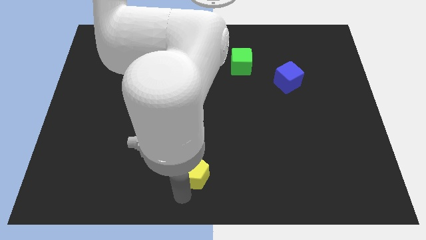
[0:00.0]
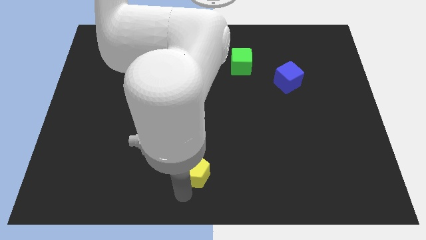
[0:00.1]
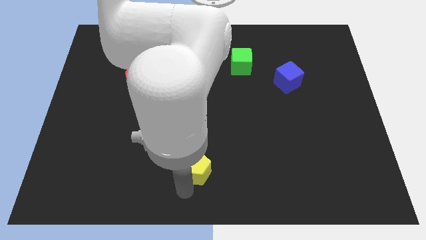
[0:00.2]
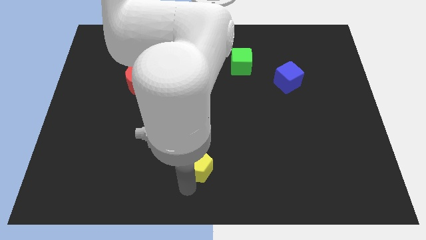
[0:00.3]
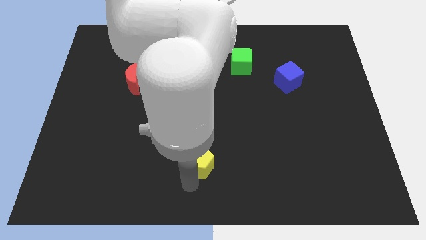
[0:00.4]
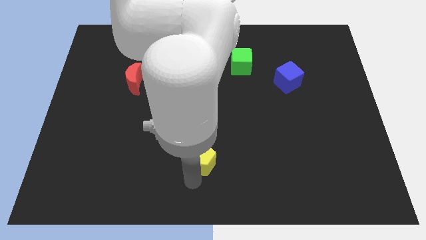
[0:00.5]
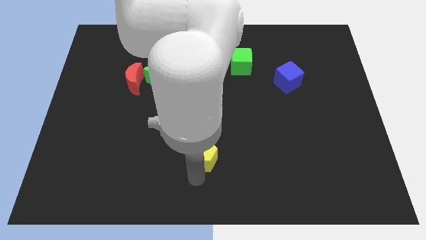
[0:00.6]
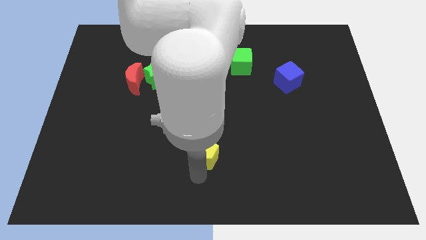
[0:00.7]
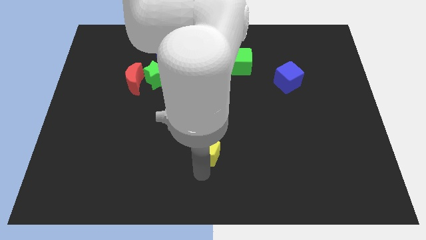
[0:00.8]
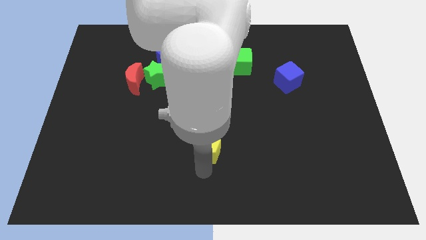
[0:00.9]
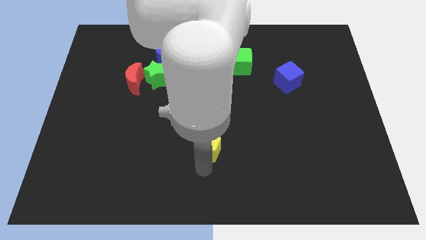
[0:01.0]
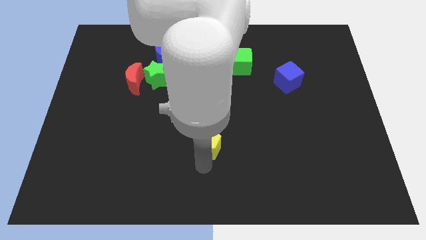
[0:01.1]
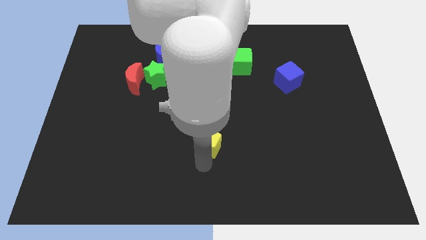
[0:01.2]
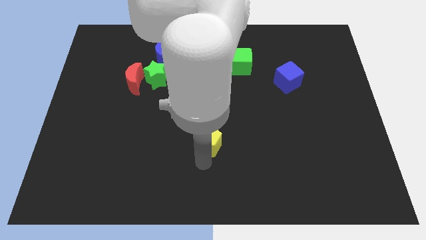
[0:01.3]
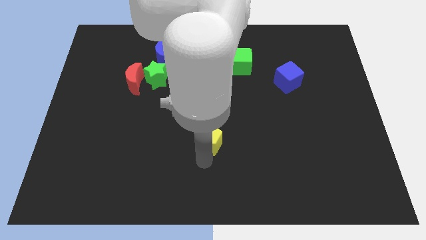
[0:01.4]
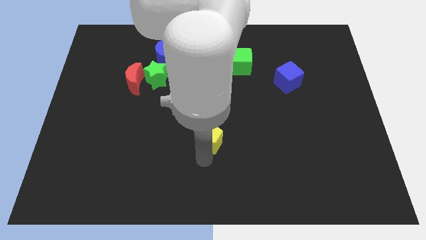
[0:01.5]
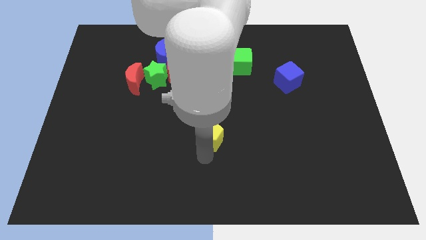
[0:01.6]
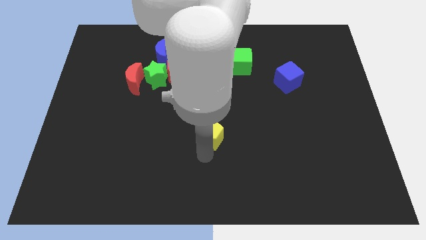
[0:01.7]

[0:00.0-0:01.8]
push yellow pentagon upwards

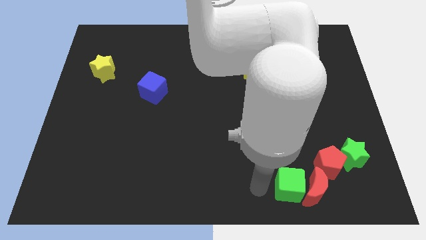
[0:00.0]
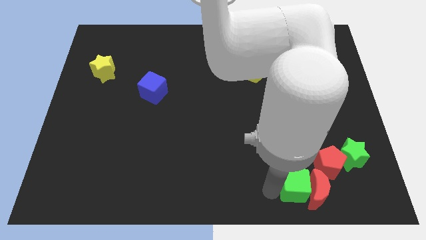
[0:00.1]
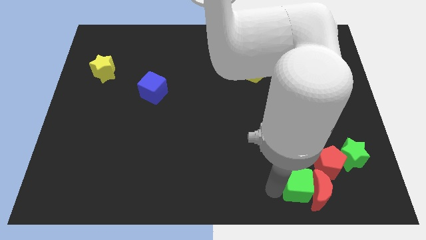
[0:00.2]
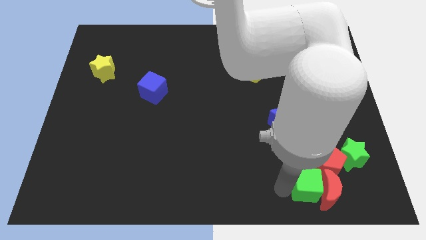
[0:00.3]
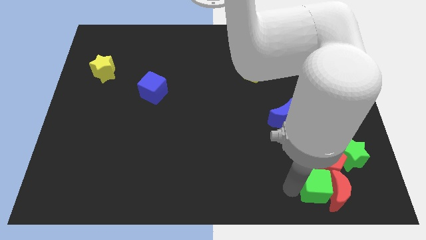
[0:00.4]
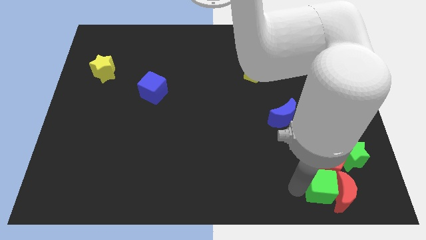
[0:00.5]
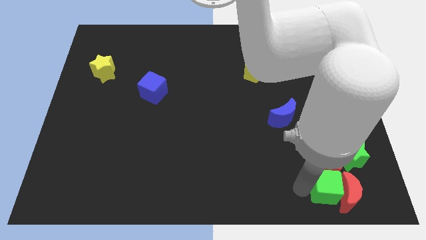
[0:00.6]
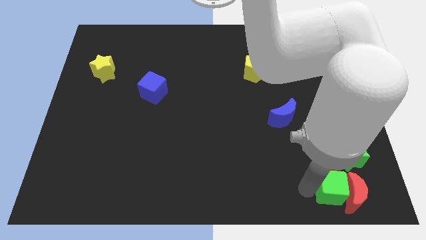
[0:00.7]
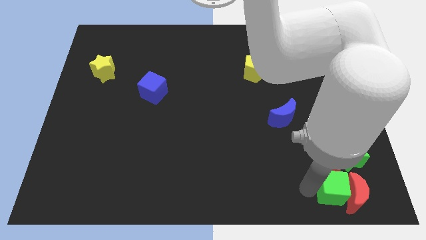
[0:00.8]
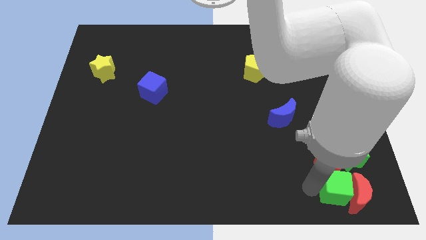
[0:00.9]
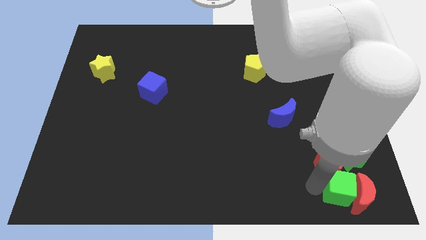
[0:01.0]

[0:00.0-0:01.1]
push the green cube along with the red moon towards the right side of the board

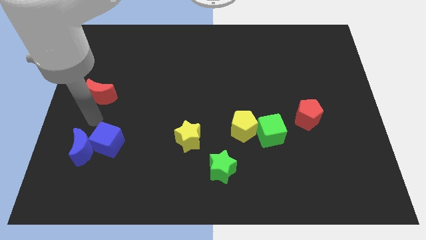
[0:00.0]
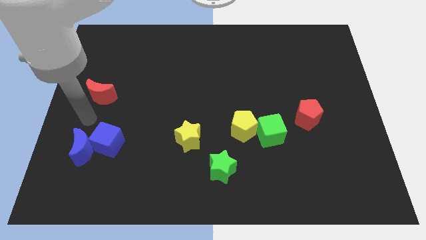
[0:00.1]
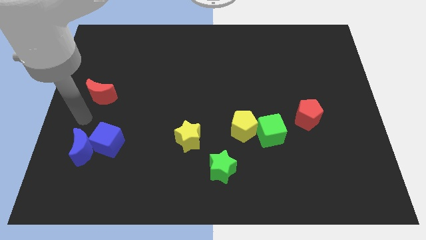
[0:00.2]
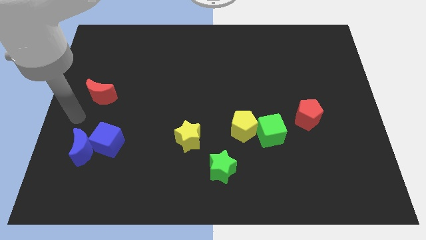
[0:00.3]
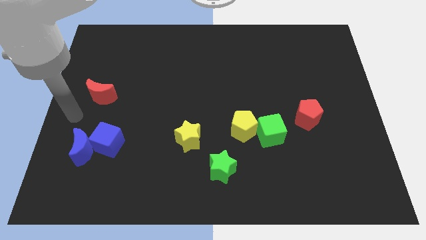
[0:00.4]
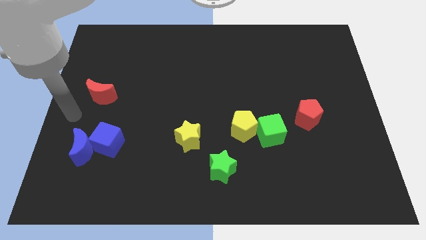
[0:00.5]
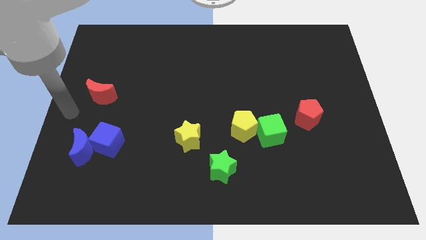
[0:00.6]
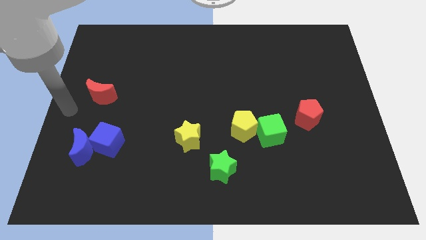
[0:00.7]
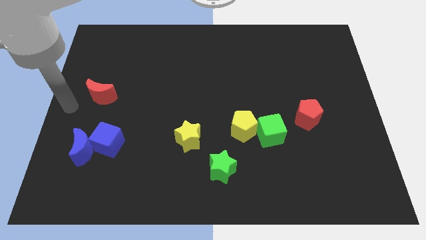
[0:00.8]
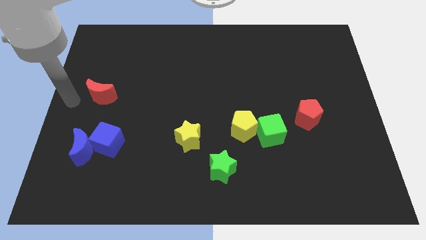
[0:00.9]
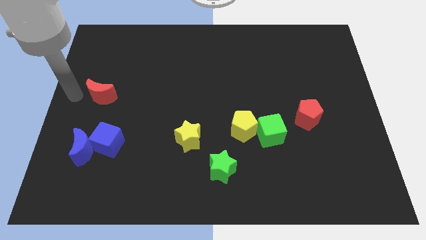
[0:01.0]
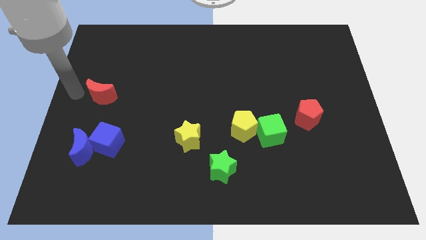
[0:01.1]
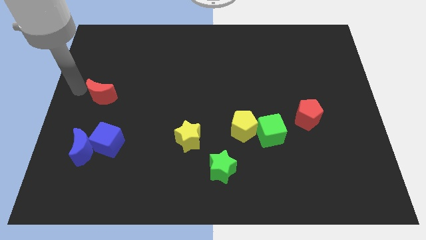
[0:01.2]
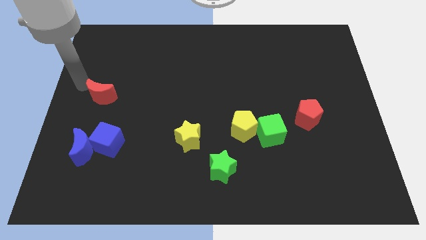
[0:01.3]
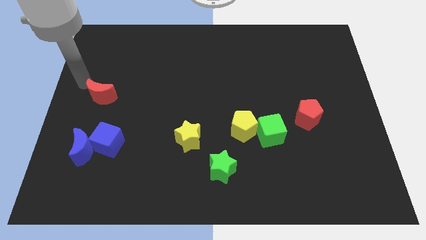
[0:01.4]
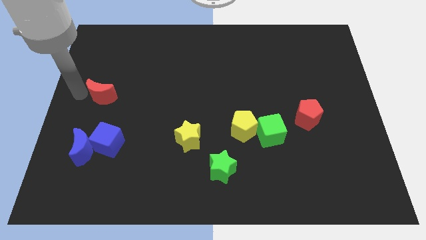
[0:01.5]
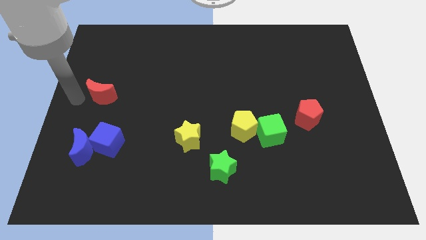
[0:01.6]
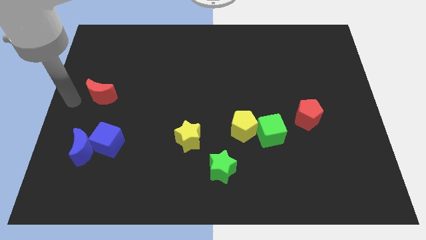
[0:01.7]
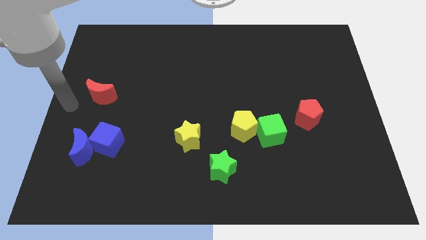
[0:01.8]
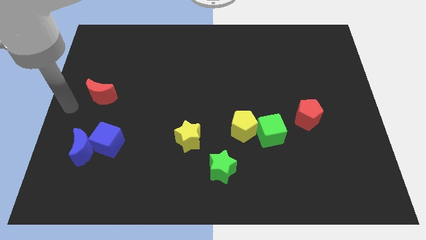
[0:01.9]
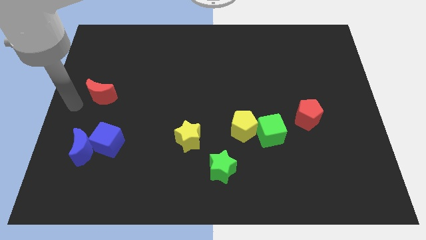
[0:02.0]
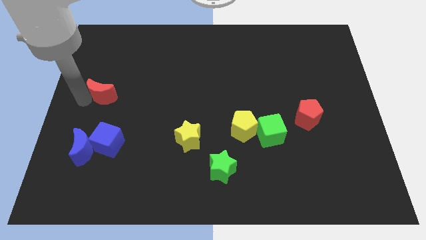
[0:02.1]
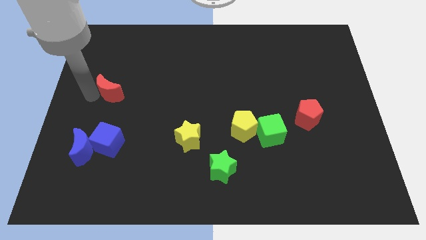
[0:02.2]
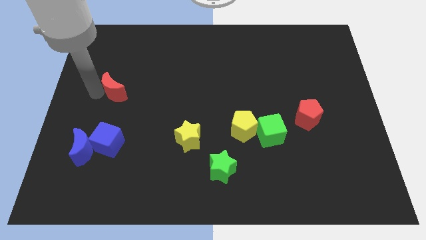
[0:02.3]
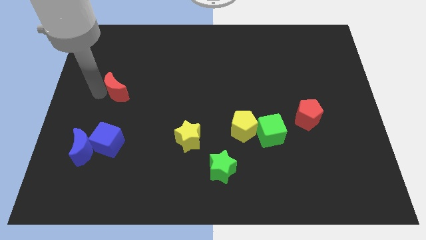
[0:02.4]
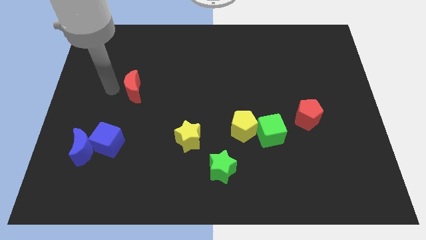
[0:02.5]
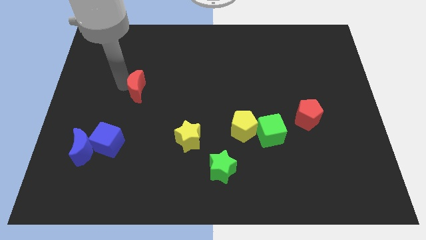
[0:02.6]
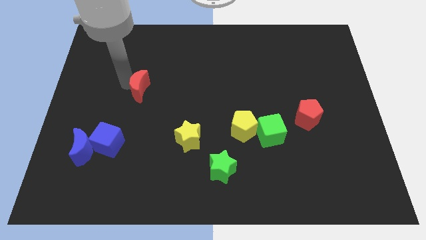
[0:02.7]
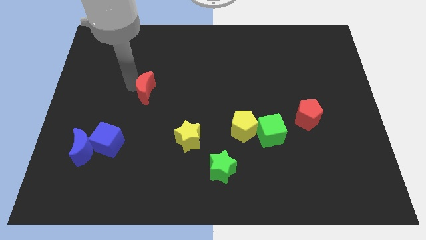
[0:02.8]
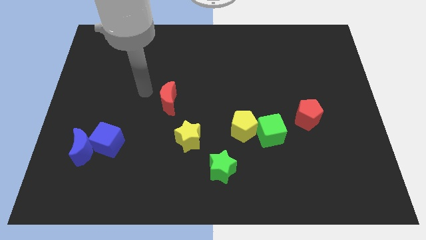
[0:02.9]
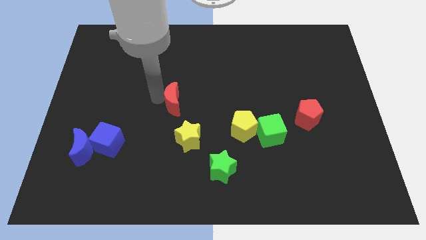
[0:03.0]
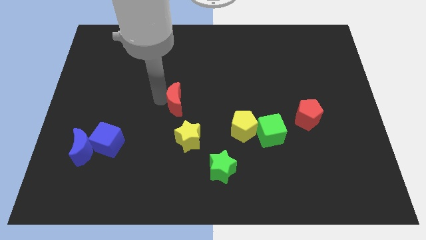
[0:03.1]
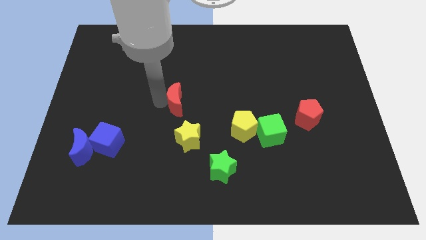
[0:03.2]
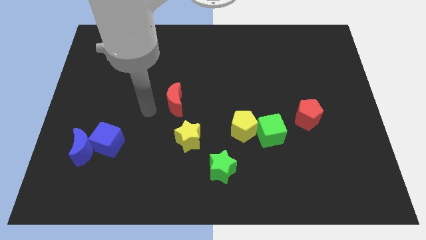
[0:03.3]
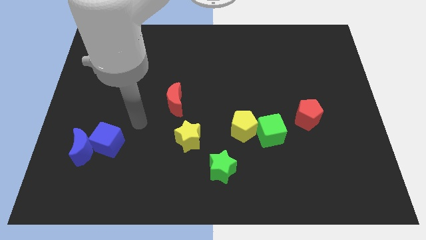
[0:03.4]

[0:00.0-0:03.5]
move the red crescent near to the yellow star

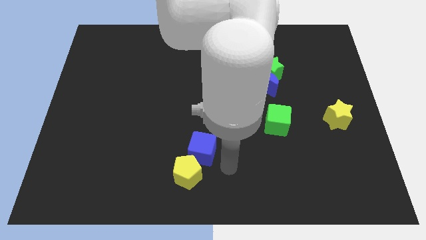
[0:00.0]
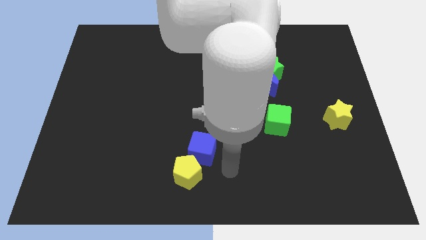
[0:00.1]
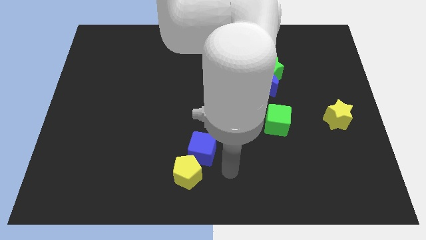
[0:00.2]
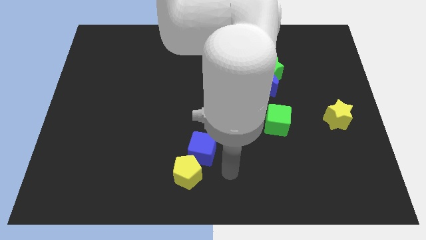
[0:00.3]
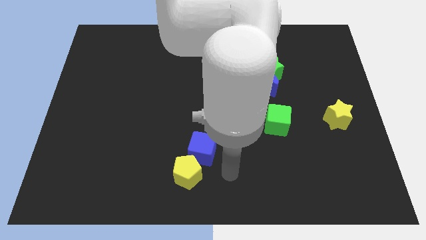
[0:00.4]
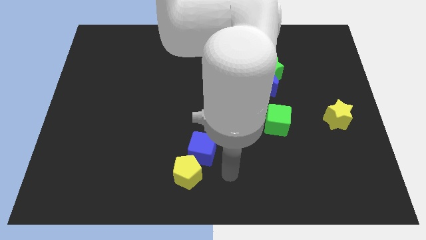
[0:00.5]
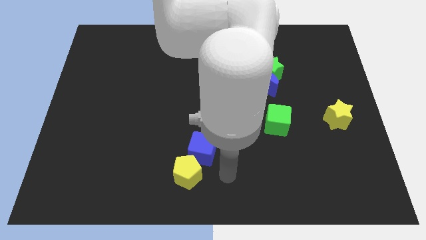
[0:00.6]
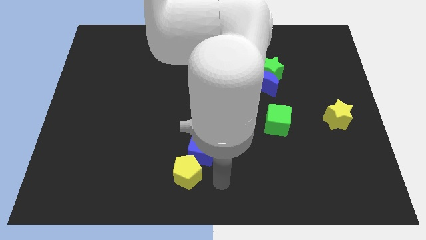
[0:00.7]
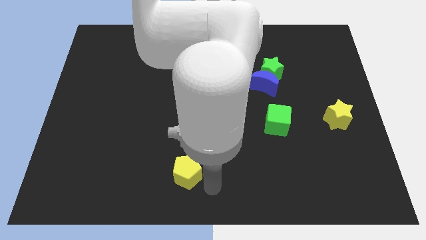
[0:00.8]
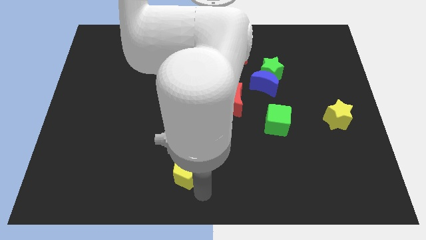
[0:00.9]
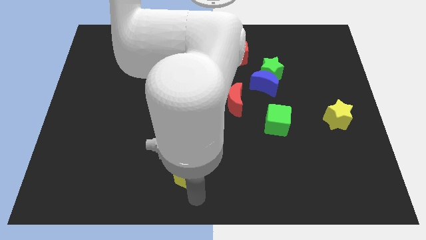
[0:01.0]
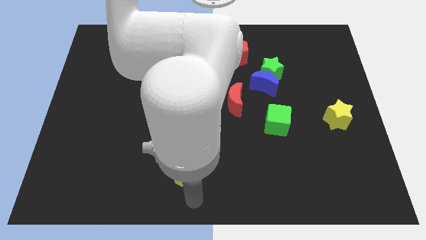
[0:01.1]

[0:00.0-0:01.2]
move the arm to the bottom of the yellow pentagon

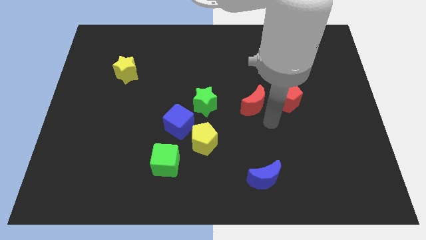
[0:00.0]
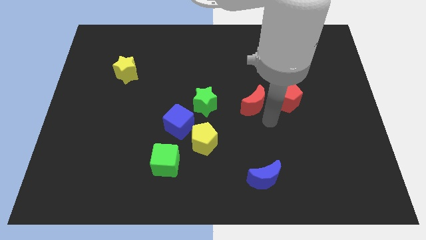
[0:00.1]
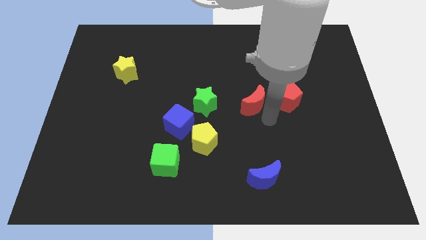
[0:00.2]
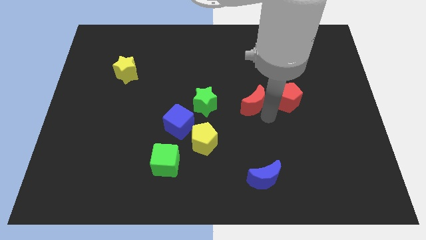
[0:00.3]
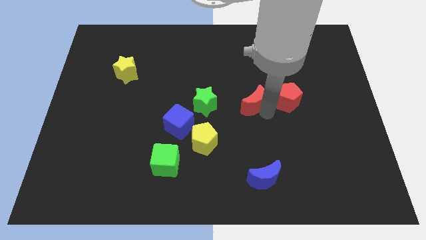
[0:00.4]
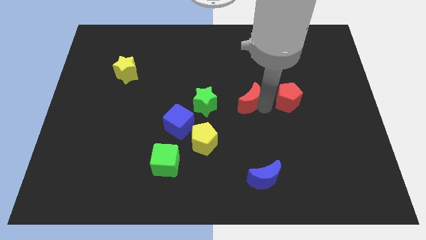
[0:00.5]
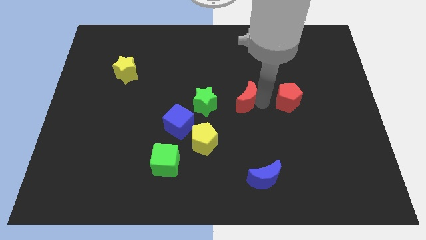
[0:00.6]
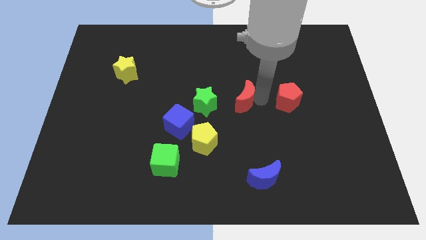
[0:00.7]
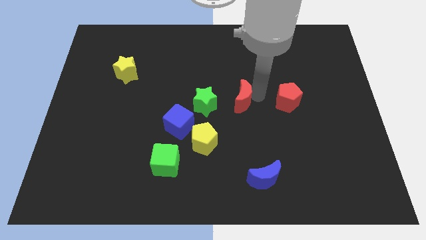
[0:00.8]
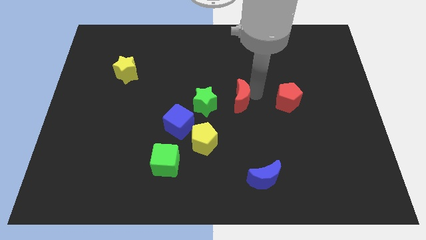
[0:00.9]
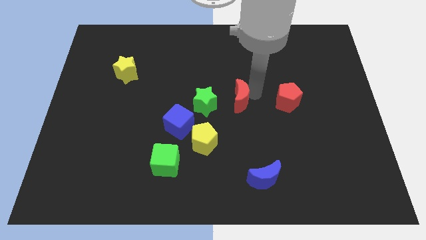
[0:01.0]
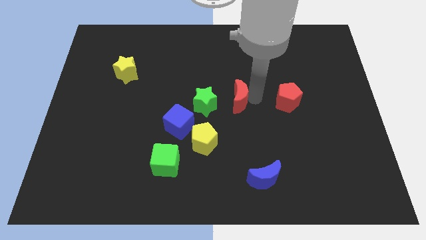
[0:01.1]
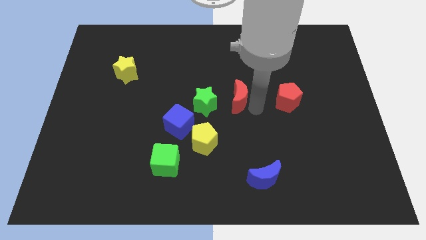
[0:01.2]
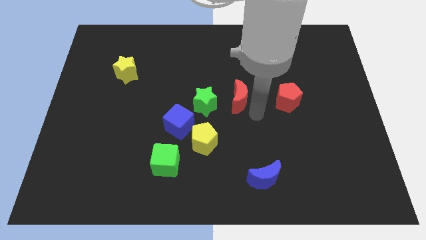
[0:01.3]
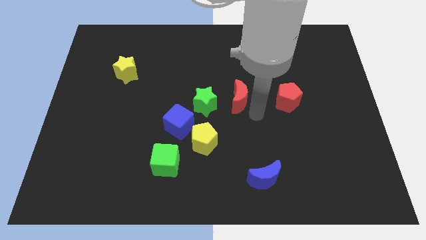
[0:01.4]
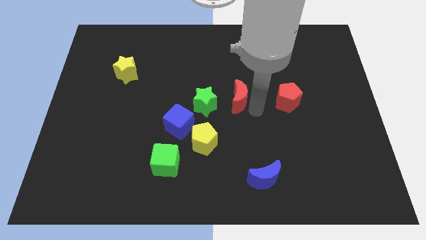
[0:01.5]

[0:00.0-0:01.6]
push the red moon slightly to the left
